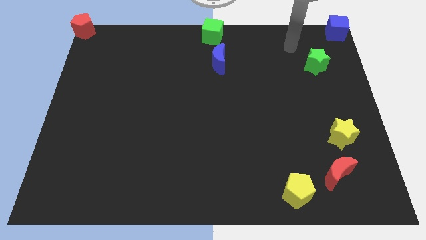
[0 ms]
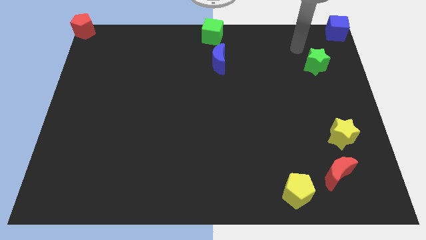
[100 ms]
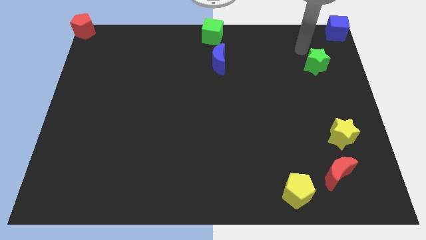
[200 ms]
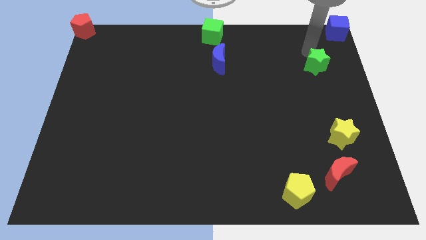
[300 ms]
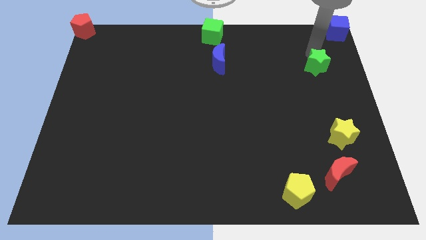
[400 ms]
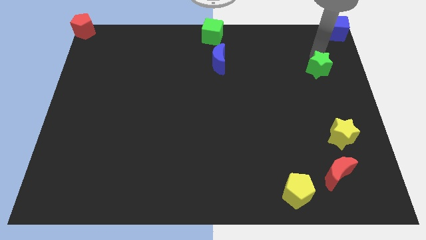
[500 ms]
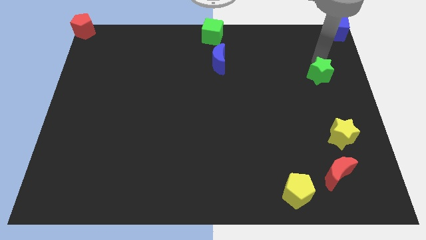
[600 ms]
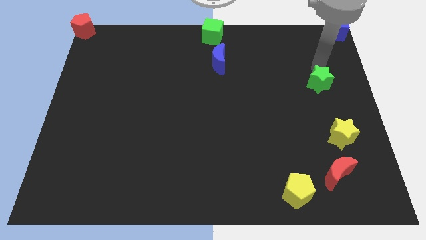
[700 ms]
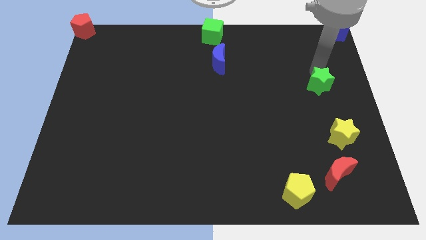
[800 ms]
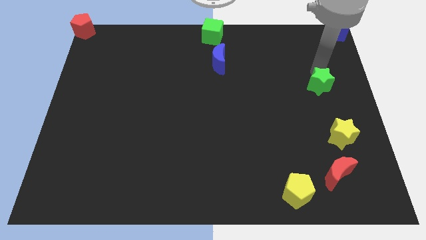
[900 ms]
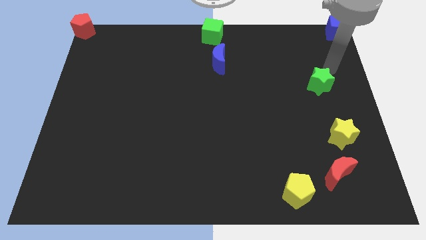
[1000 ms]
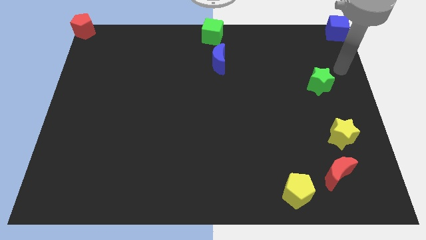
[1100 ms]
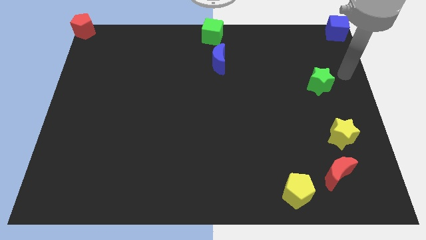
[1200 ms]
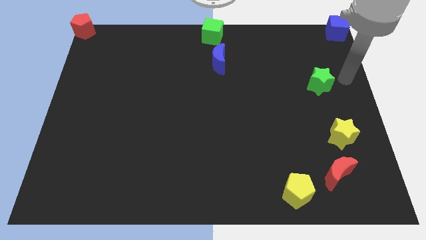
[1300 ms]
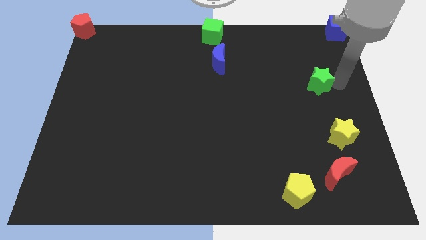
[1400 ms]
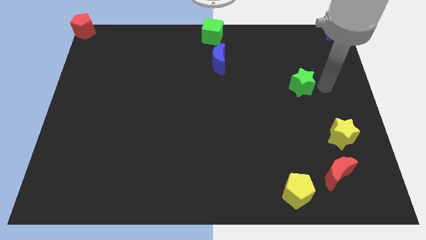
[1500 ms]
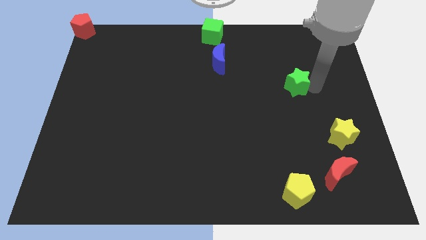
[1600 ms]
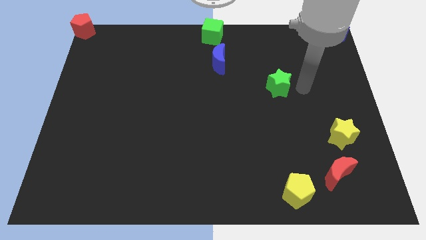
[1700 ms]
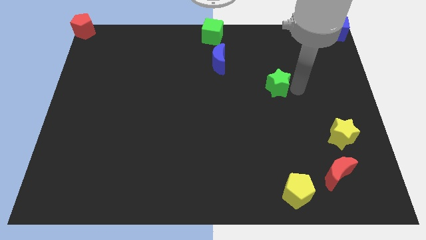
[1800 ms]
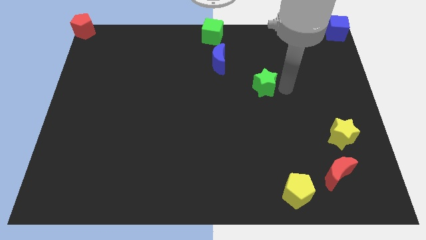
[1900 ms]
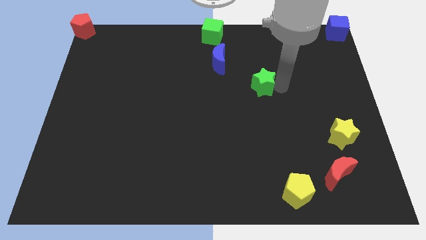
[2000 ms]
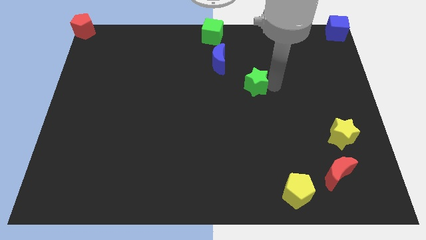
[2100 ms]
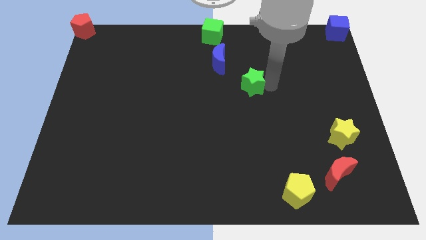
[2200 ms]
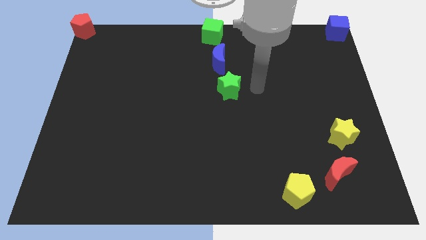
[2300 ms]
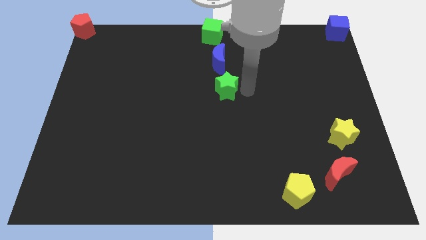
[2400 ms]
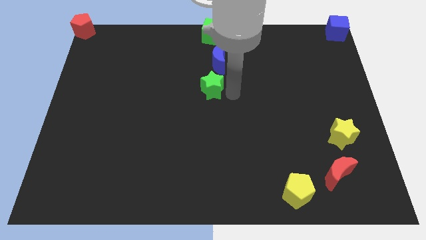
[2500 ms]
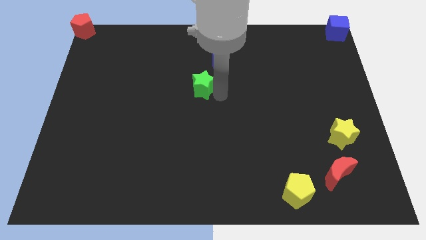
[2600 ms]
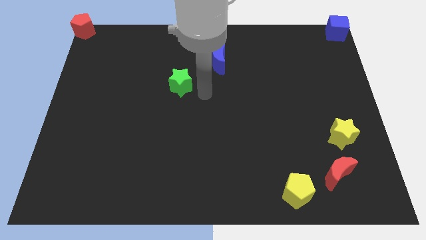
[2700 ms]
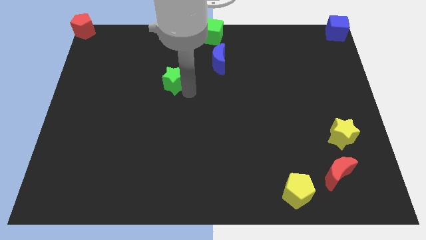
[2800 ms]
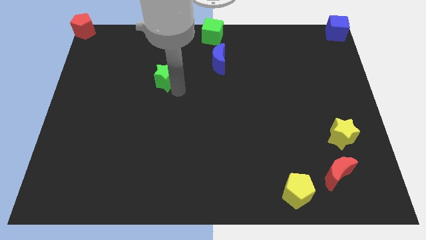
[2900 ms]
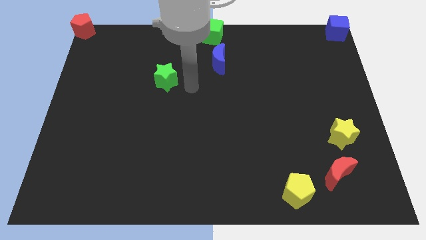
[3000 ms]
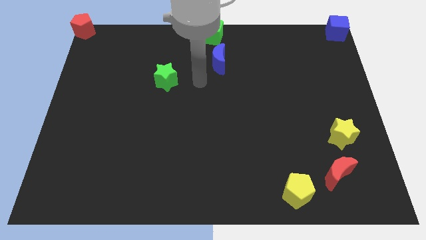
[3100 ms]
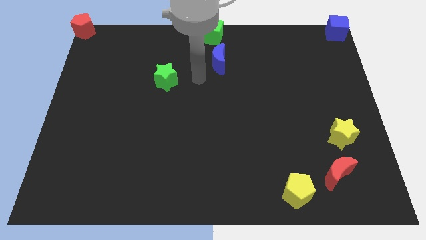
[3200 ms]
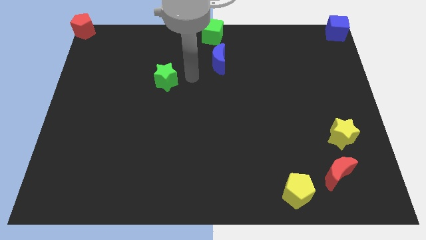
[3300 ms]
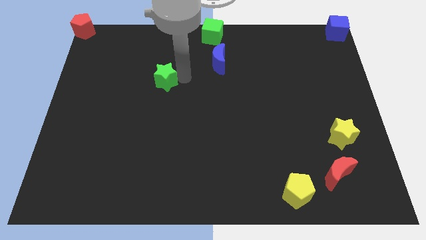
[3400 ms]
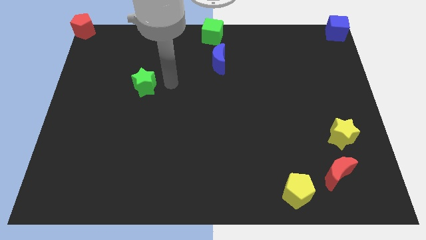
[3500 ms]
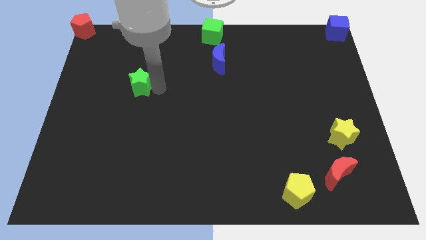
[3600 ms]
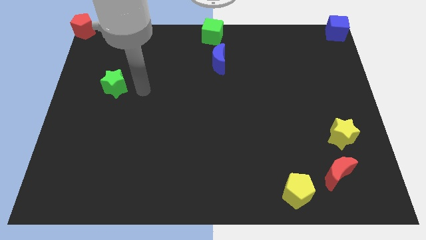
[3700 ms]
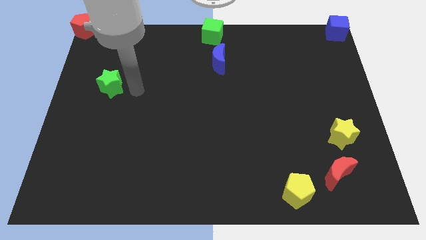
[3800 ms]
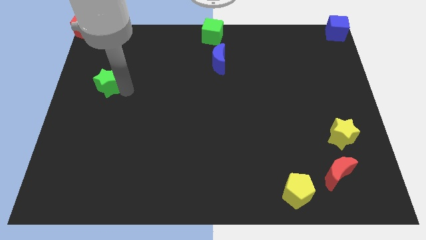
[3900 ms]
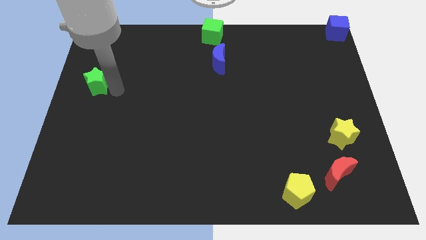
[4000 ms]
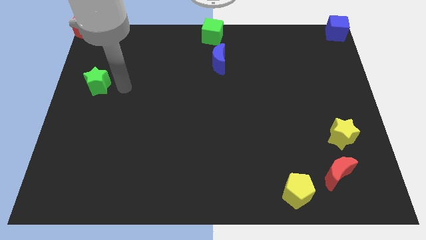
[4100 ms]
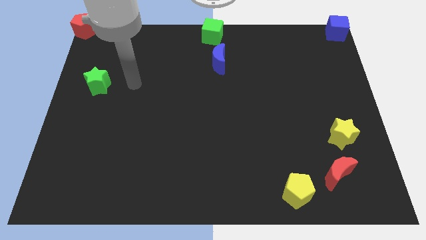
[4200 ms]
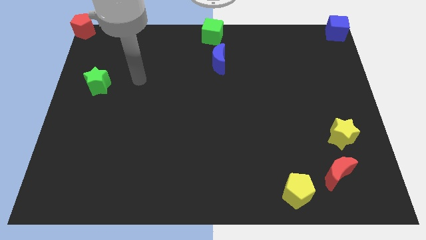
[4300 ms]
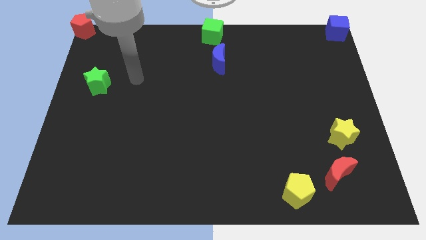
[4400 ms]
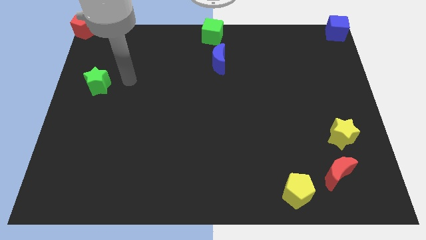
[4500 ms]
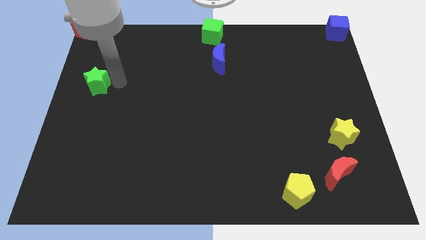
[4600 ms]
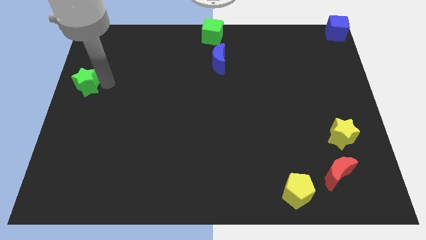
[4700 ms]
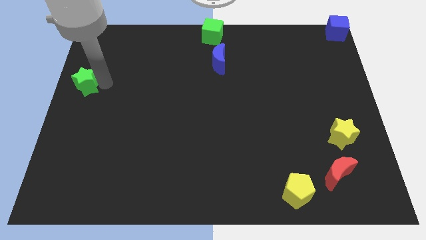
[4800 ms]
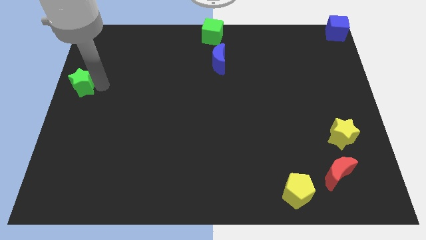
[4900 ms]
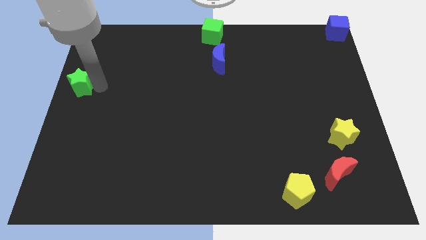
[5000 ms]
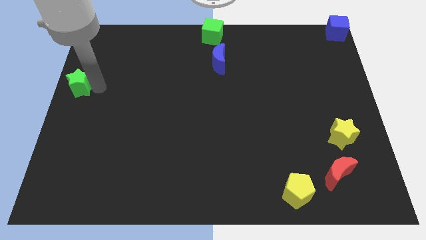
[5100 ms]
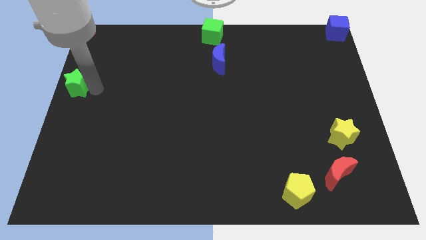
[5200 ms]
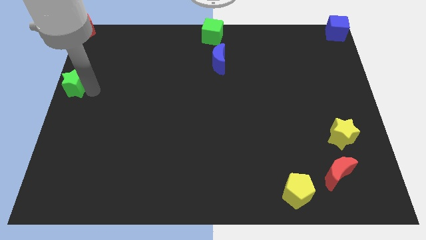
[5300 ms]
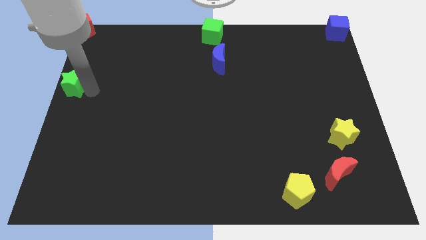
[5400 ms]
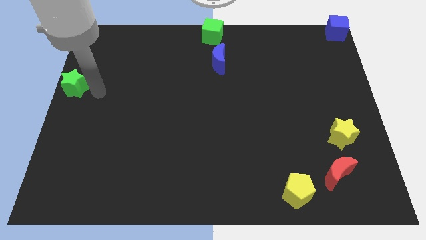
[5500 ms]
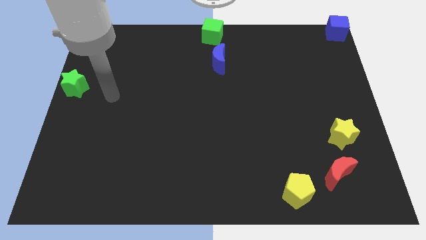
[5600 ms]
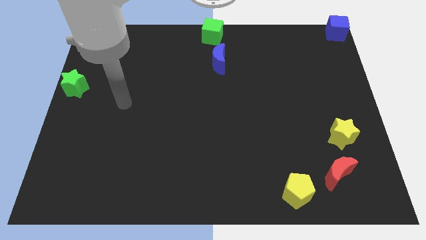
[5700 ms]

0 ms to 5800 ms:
move the green star to the center left of the board

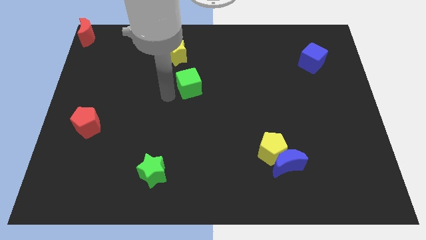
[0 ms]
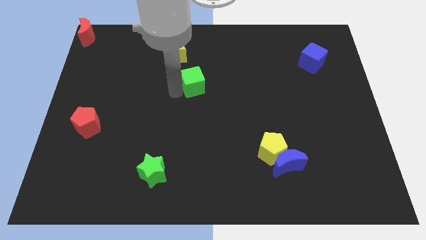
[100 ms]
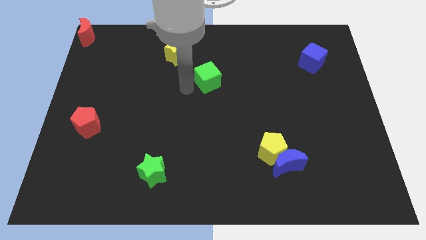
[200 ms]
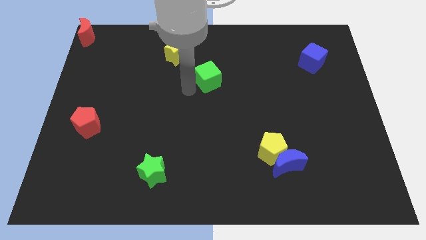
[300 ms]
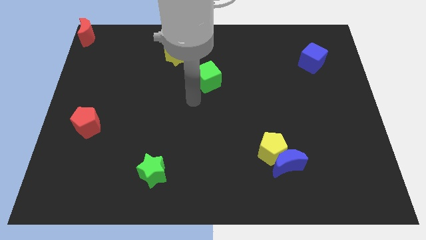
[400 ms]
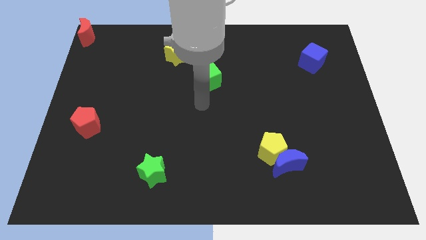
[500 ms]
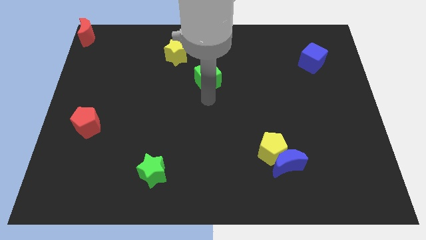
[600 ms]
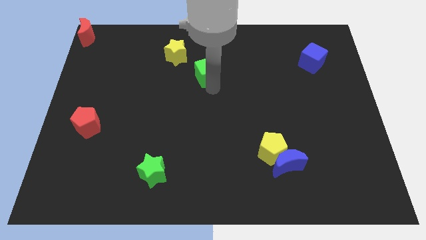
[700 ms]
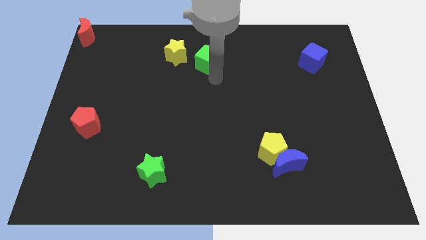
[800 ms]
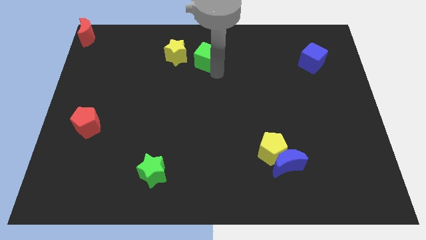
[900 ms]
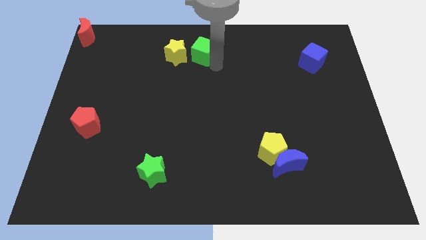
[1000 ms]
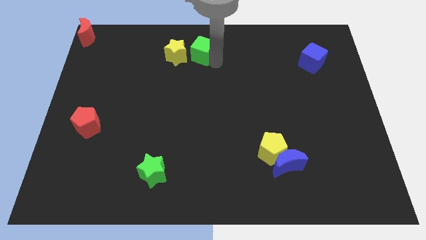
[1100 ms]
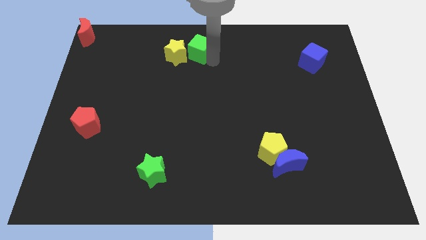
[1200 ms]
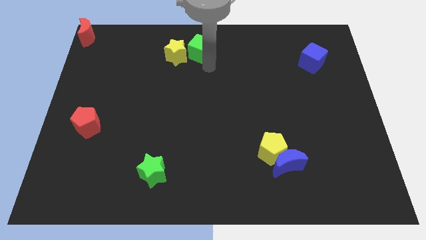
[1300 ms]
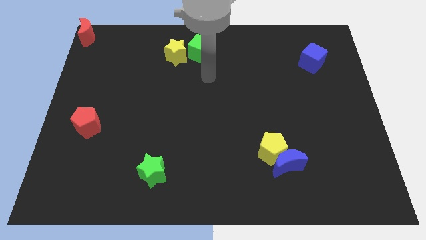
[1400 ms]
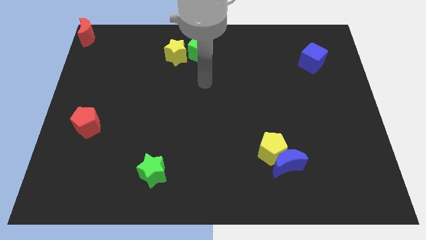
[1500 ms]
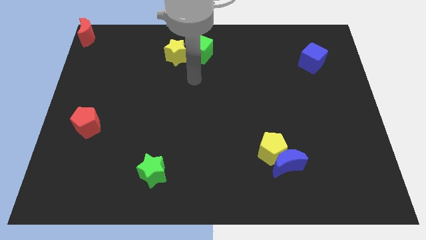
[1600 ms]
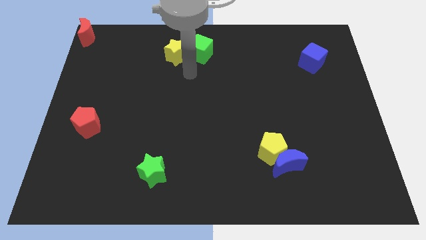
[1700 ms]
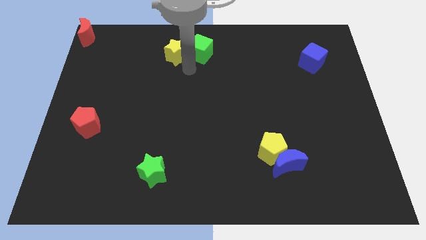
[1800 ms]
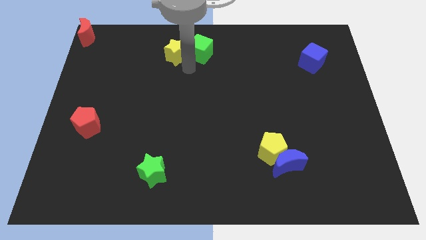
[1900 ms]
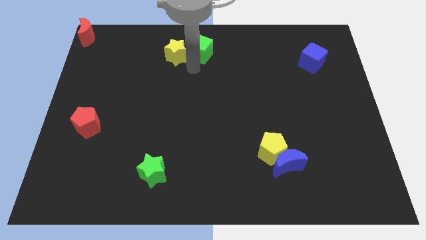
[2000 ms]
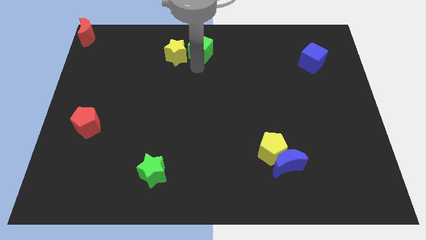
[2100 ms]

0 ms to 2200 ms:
push green cube beside yellow star

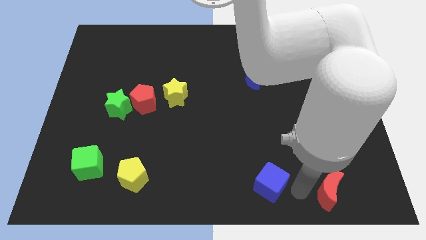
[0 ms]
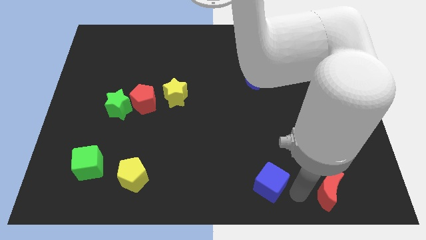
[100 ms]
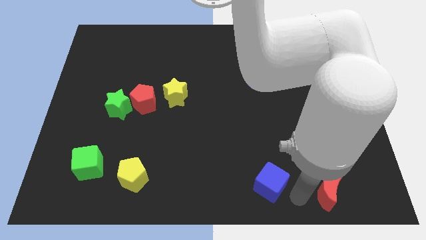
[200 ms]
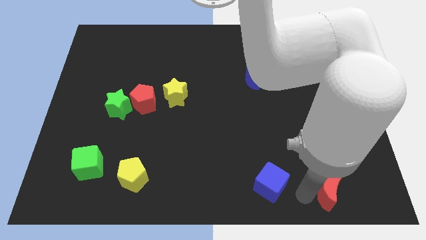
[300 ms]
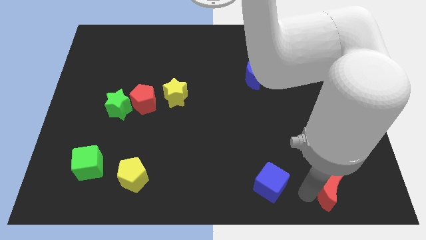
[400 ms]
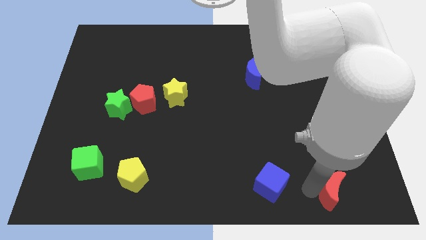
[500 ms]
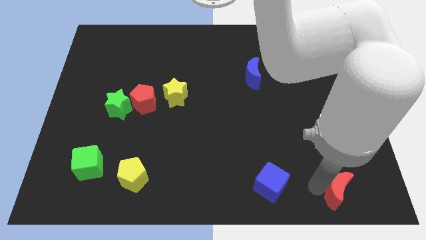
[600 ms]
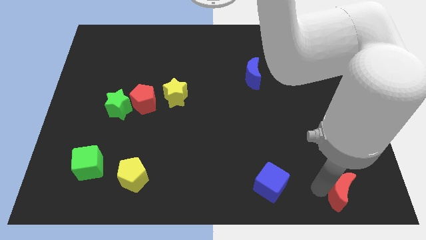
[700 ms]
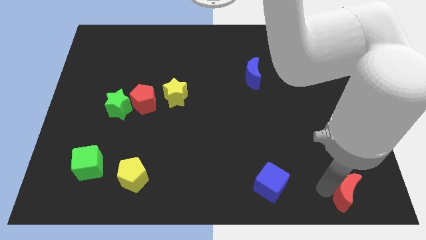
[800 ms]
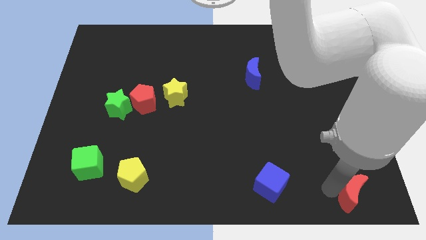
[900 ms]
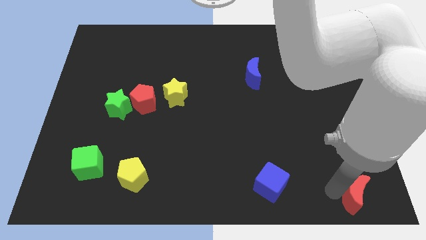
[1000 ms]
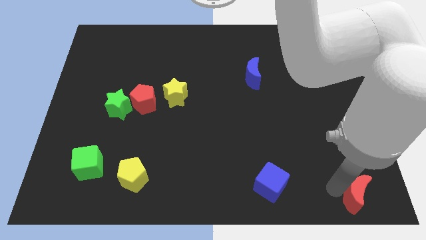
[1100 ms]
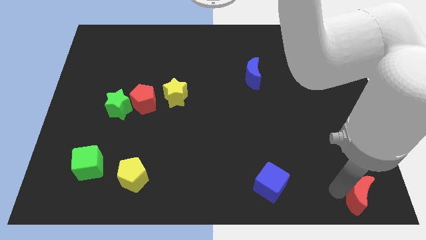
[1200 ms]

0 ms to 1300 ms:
push the red crescent to the bottom right of the board
